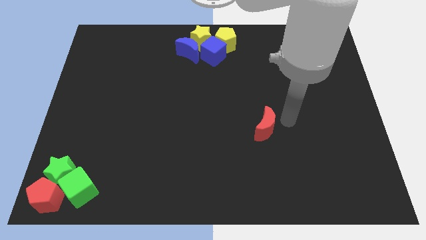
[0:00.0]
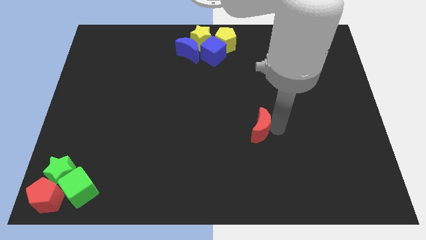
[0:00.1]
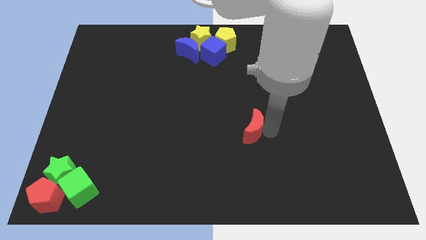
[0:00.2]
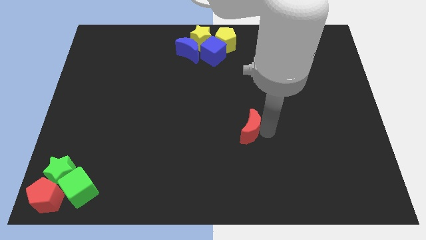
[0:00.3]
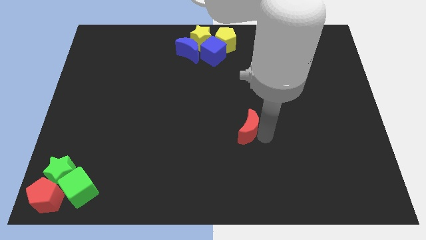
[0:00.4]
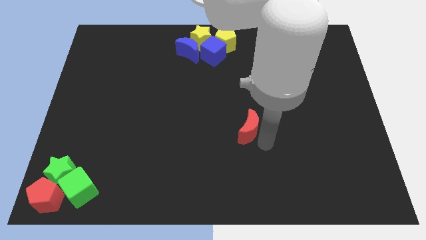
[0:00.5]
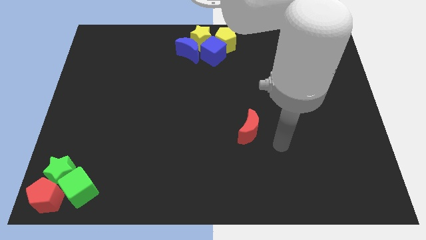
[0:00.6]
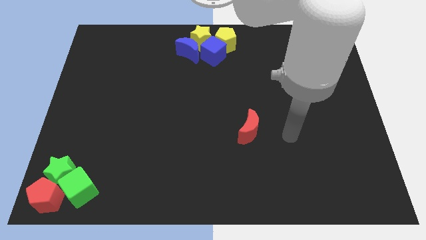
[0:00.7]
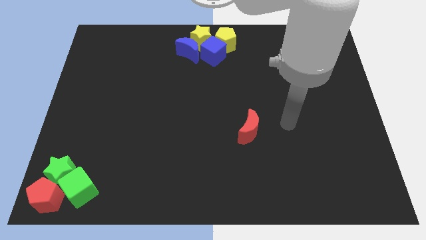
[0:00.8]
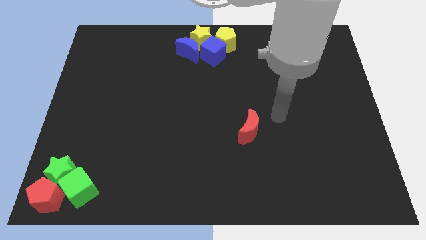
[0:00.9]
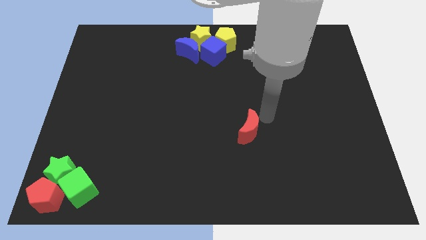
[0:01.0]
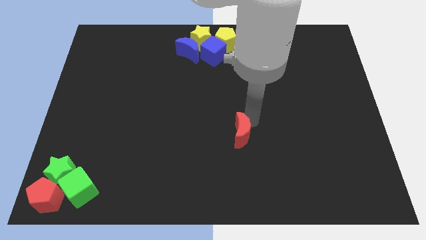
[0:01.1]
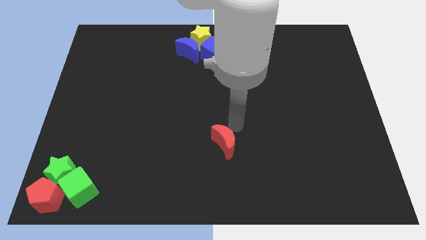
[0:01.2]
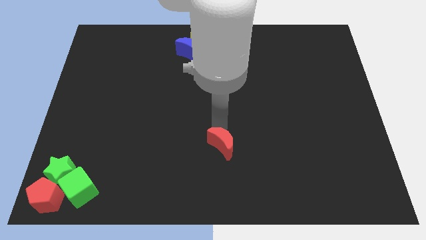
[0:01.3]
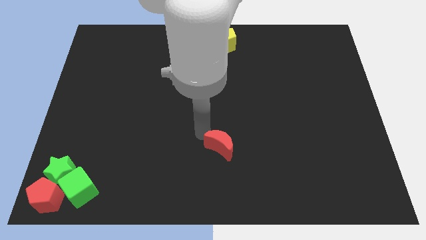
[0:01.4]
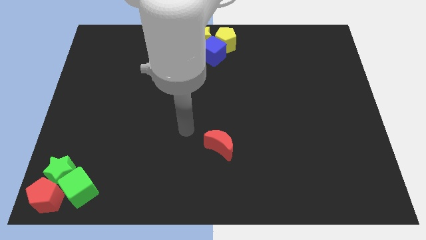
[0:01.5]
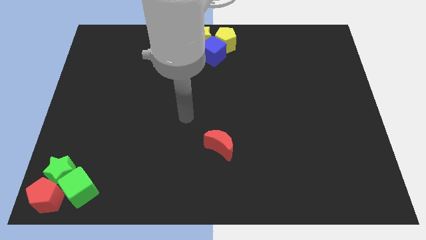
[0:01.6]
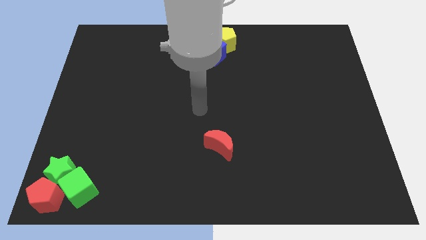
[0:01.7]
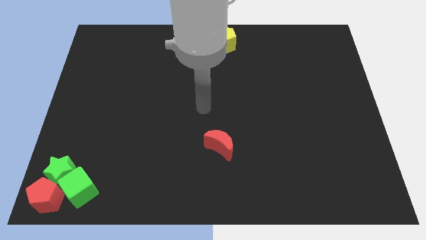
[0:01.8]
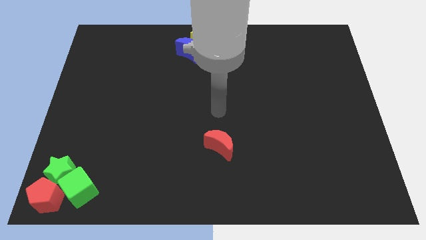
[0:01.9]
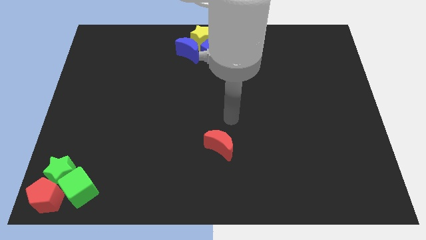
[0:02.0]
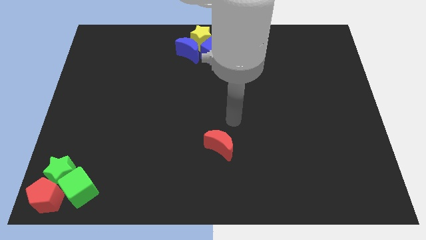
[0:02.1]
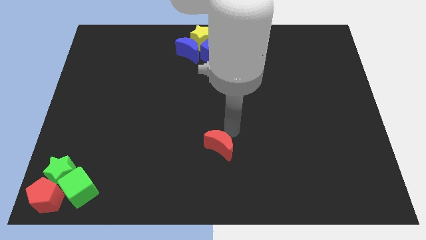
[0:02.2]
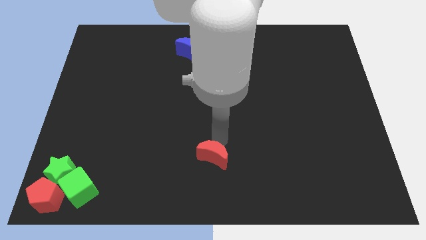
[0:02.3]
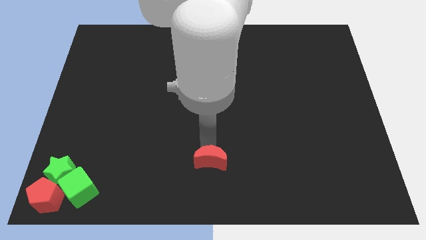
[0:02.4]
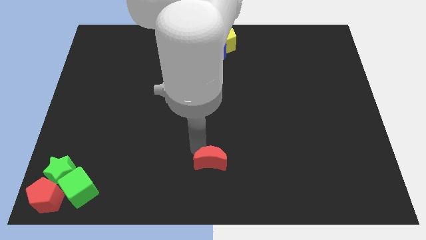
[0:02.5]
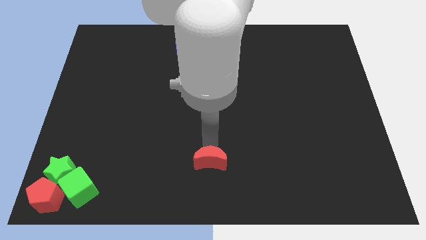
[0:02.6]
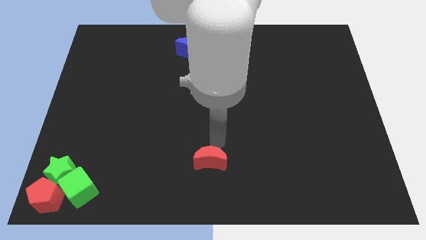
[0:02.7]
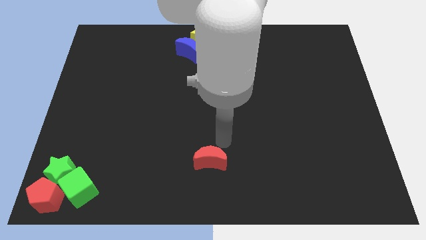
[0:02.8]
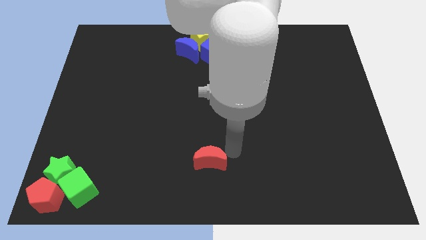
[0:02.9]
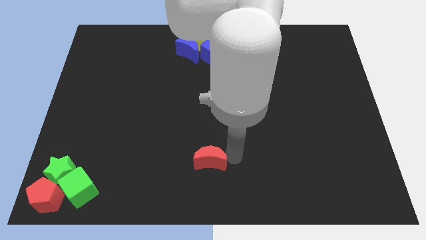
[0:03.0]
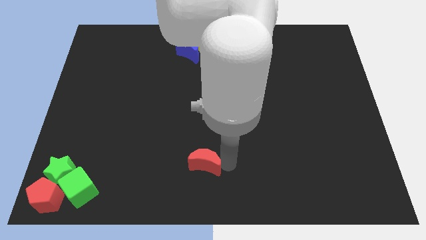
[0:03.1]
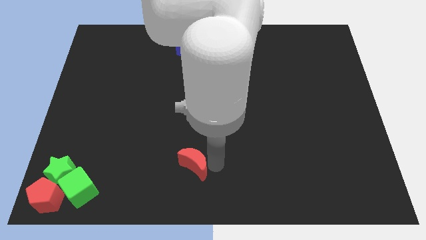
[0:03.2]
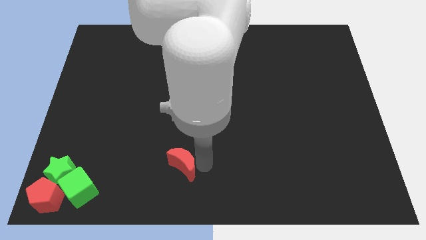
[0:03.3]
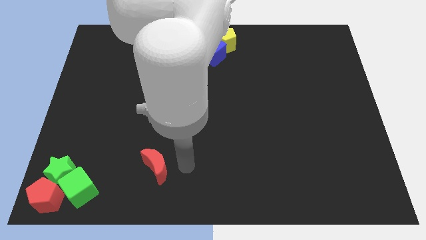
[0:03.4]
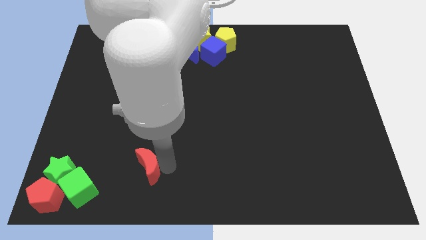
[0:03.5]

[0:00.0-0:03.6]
push the red crescent opposite to the green cube

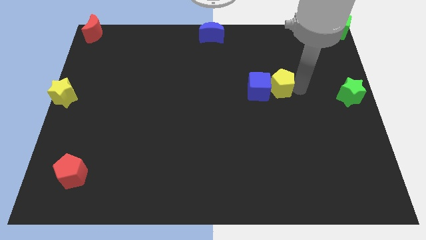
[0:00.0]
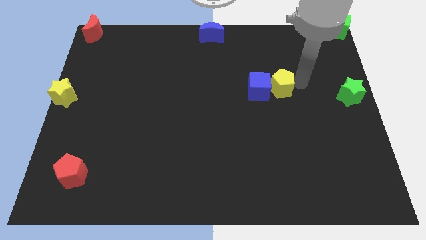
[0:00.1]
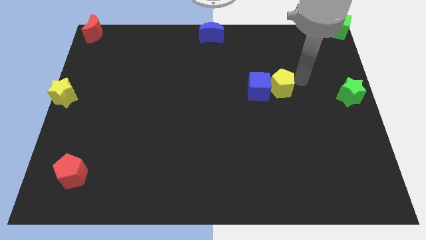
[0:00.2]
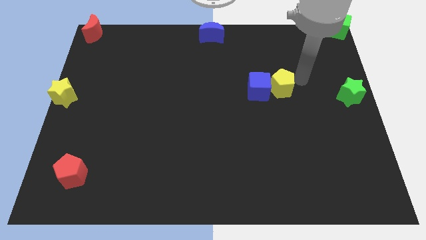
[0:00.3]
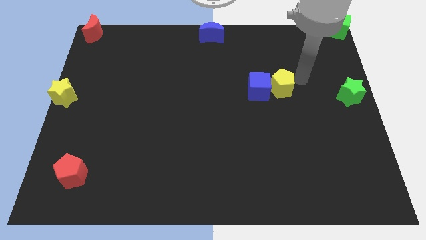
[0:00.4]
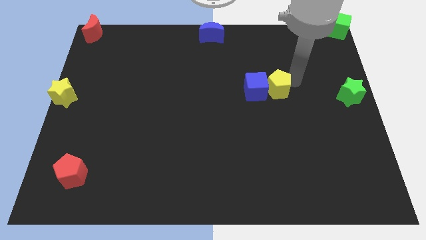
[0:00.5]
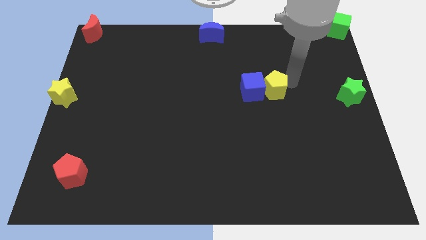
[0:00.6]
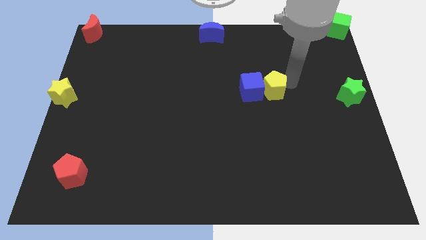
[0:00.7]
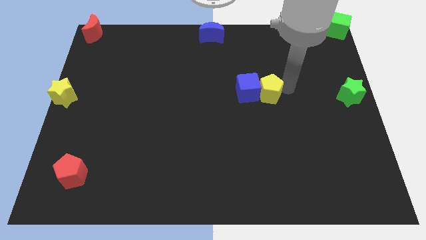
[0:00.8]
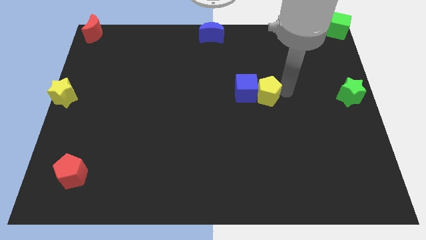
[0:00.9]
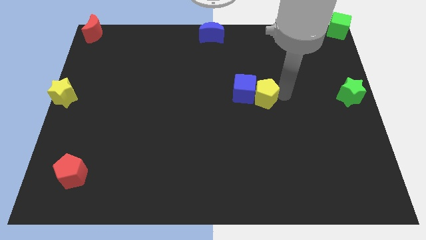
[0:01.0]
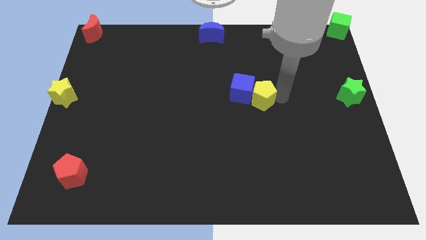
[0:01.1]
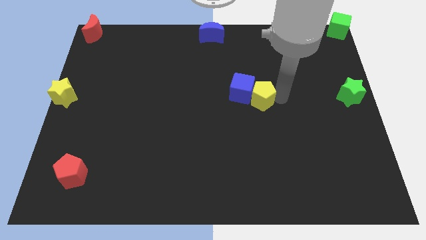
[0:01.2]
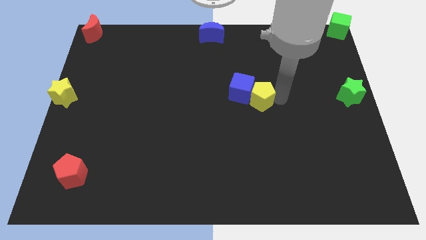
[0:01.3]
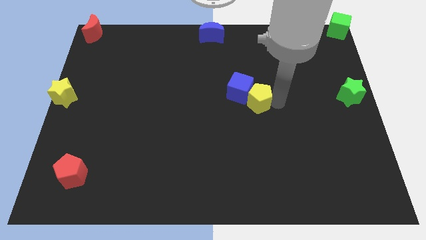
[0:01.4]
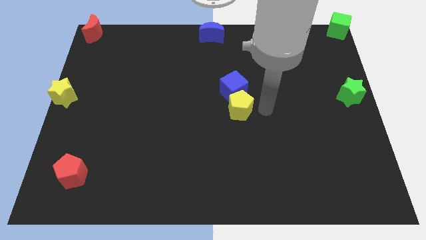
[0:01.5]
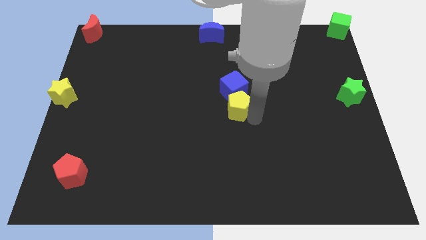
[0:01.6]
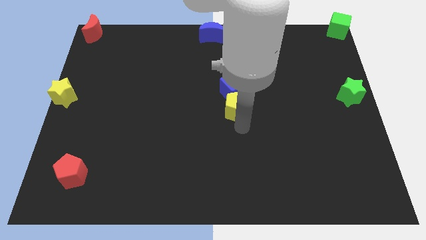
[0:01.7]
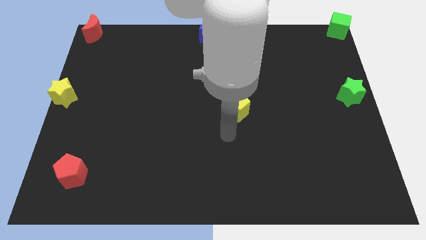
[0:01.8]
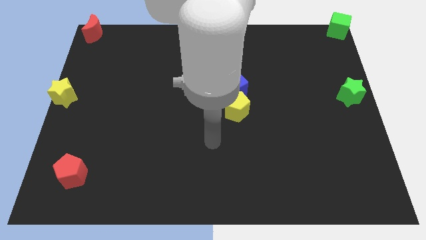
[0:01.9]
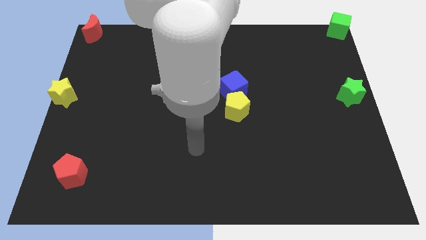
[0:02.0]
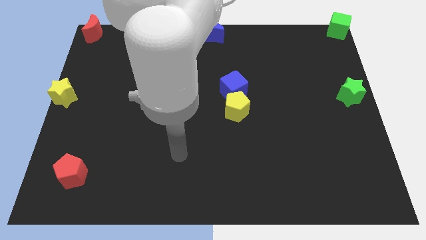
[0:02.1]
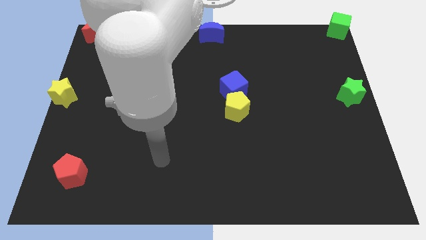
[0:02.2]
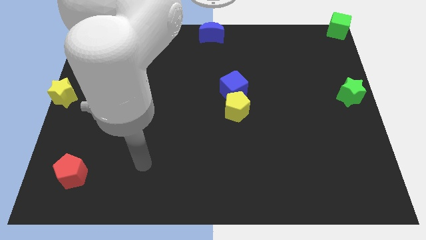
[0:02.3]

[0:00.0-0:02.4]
push the yellow pentagon into the blue cube

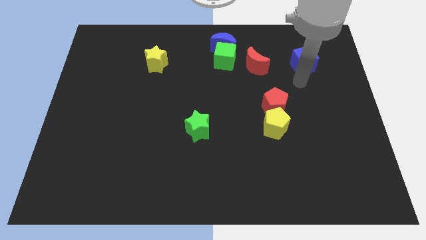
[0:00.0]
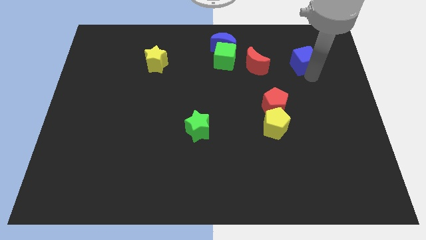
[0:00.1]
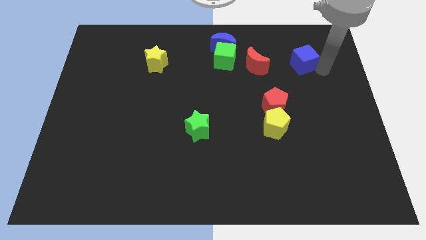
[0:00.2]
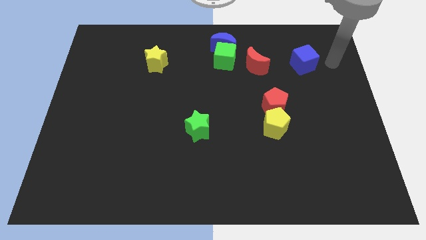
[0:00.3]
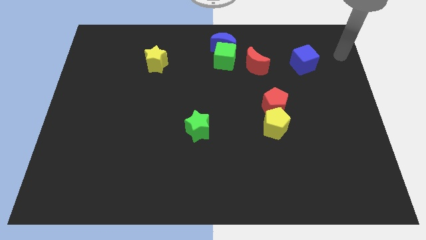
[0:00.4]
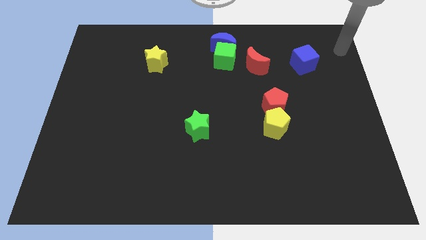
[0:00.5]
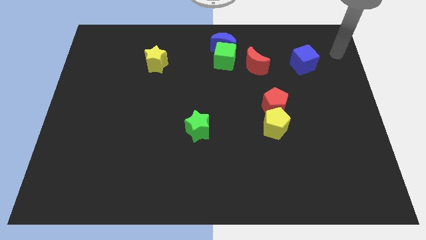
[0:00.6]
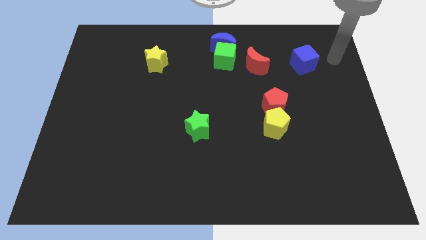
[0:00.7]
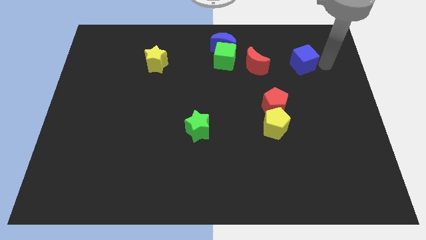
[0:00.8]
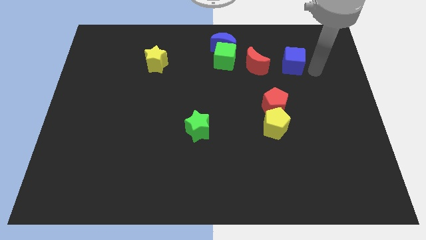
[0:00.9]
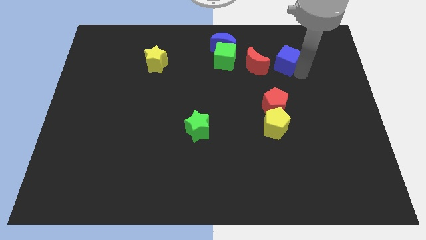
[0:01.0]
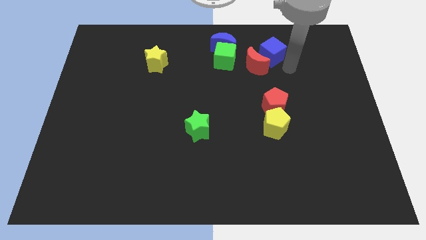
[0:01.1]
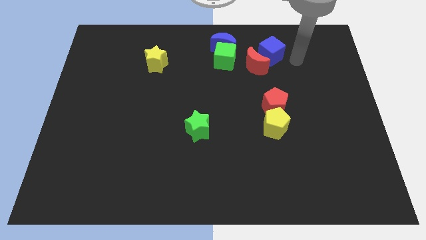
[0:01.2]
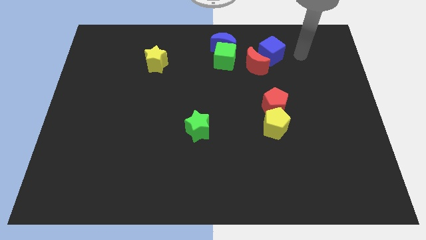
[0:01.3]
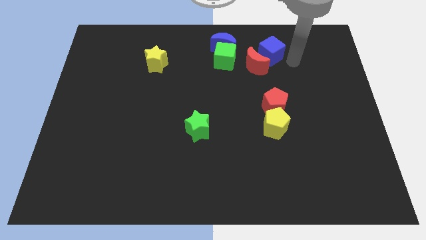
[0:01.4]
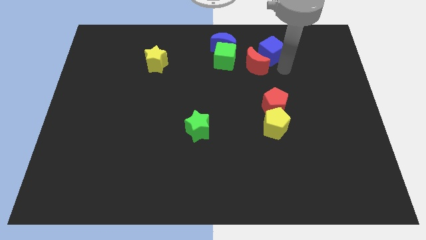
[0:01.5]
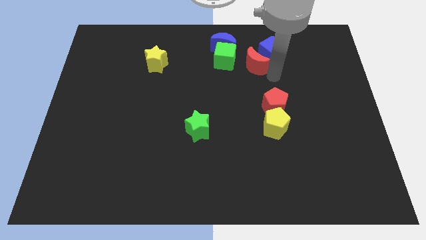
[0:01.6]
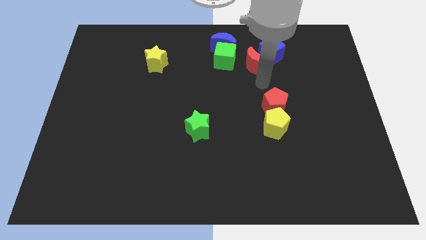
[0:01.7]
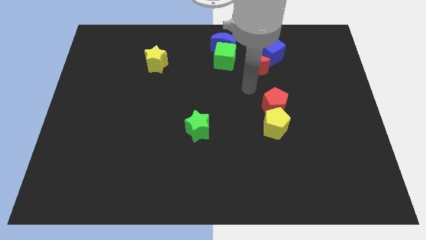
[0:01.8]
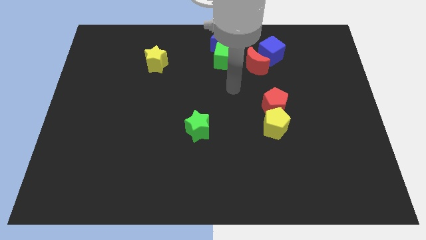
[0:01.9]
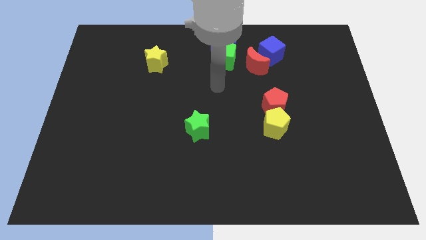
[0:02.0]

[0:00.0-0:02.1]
move the blue cube towards the red moon

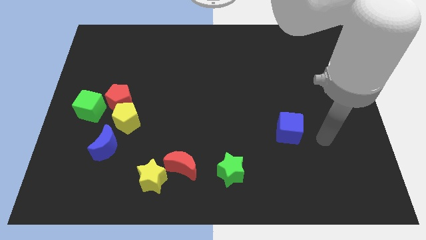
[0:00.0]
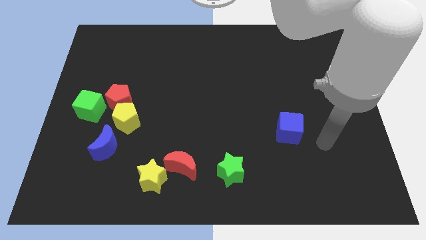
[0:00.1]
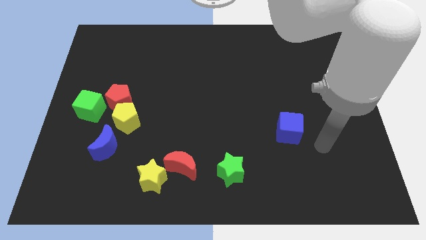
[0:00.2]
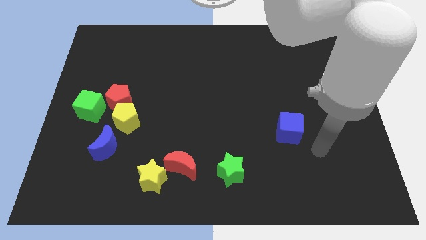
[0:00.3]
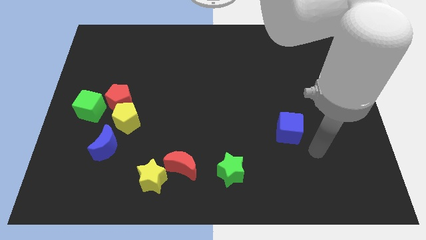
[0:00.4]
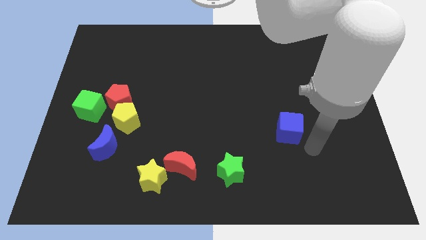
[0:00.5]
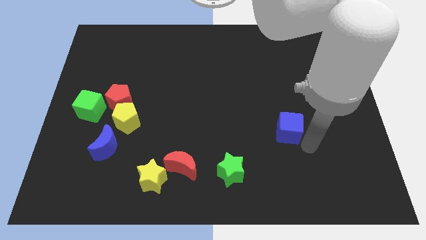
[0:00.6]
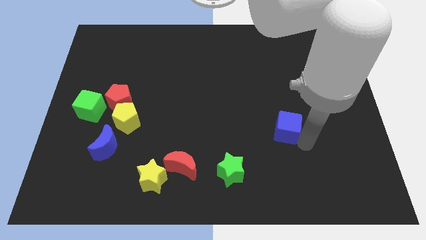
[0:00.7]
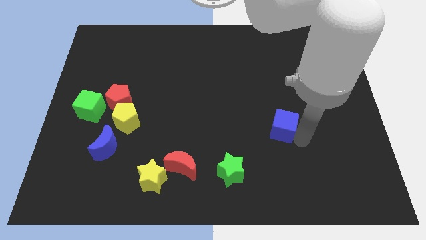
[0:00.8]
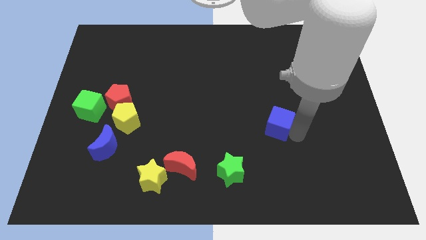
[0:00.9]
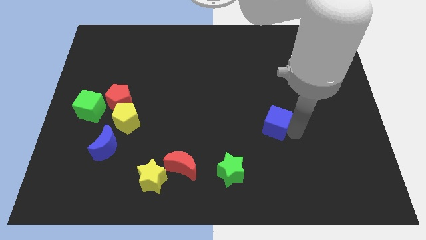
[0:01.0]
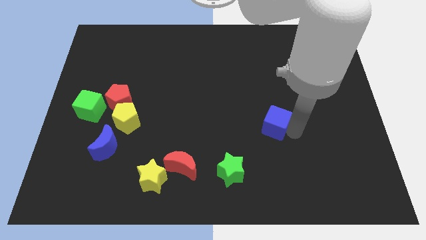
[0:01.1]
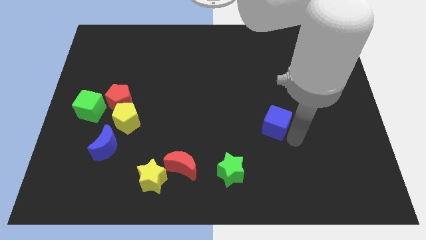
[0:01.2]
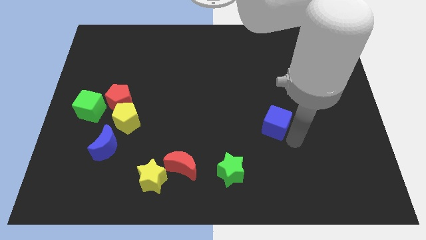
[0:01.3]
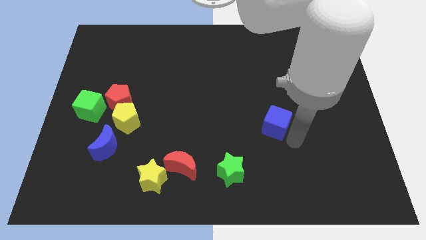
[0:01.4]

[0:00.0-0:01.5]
push the blue cube slightly to the left of the board
